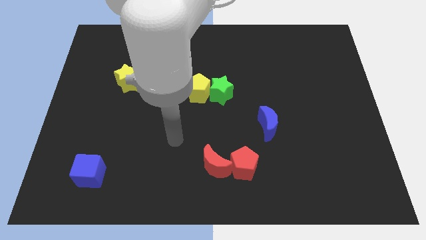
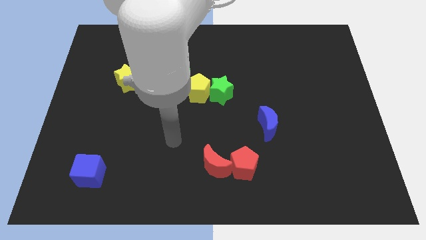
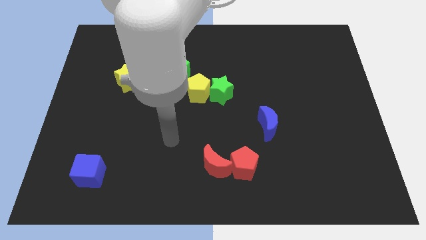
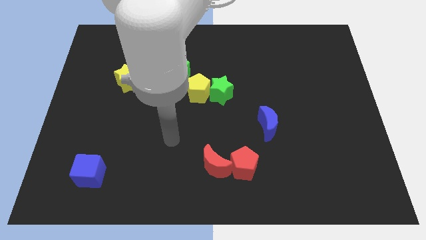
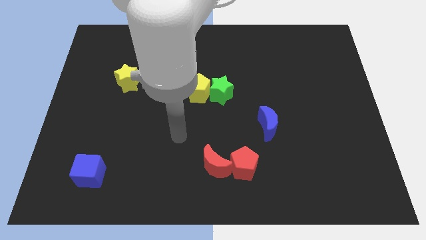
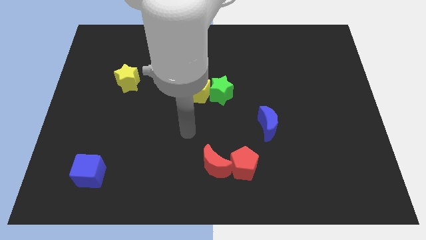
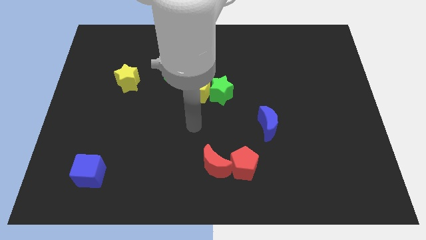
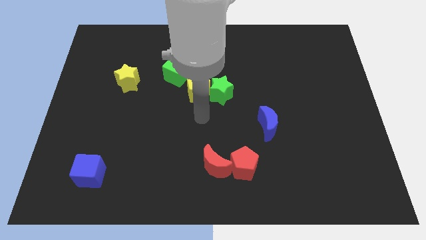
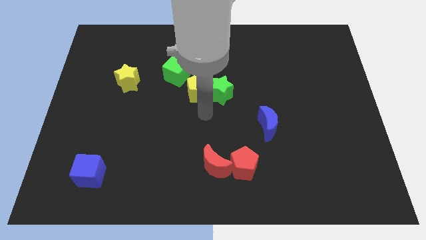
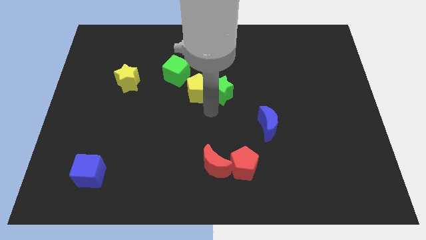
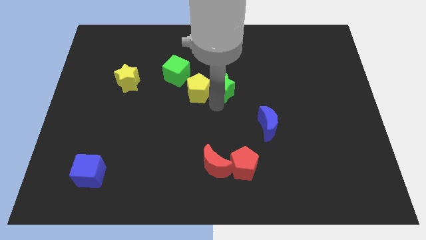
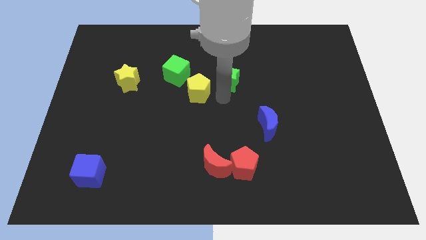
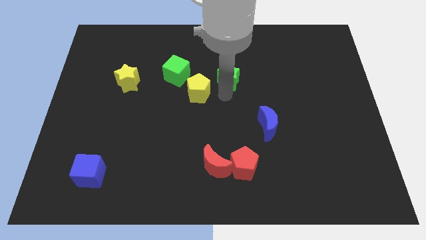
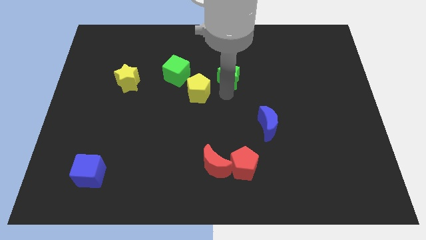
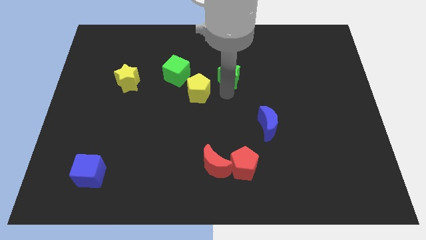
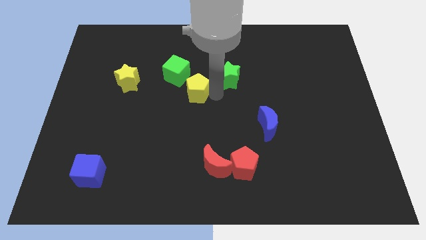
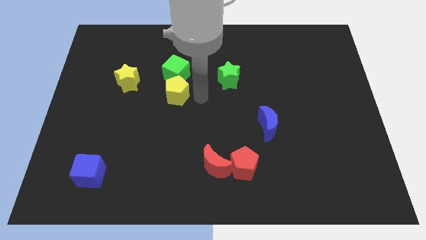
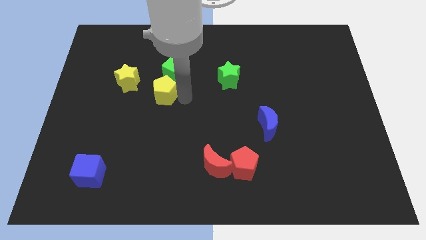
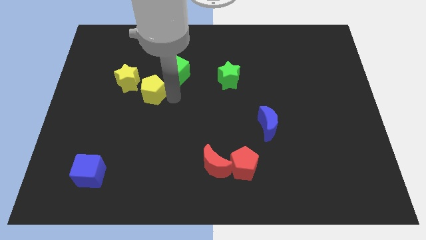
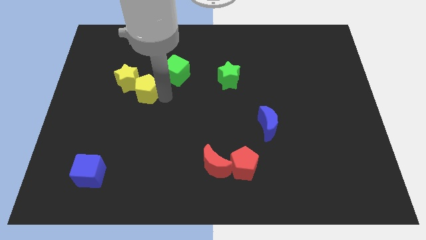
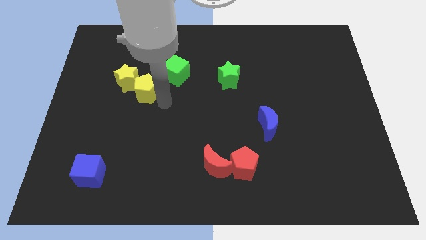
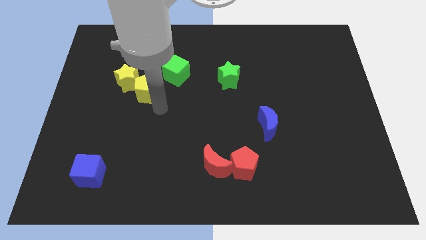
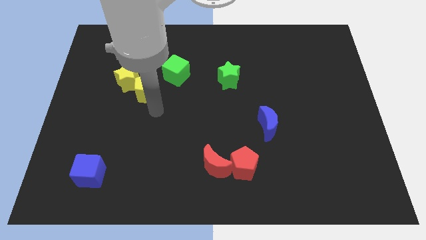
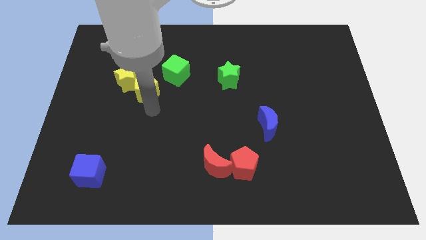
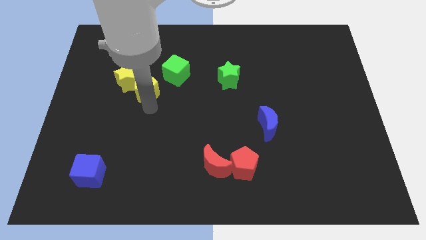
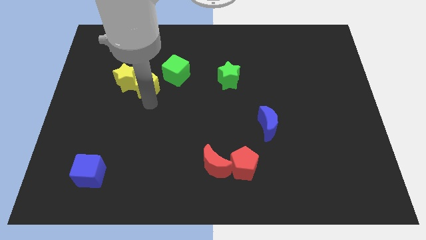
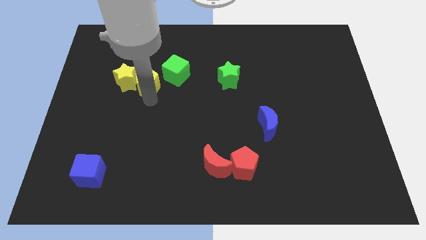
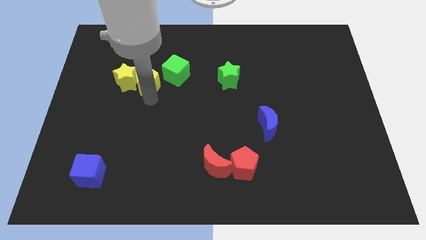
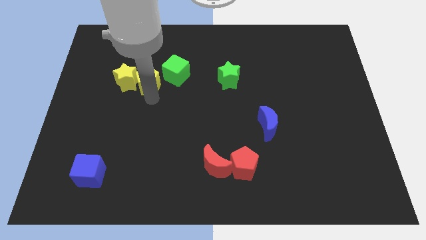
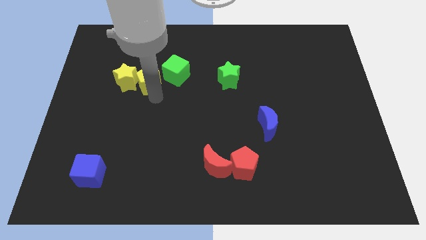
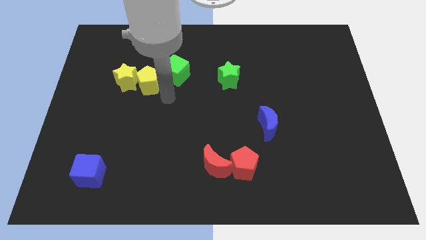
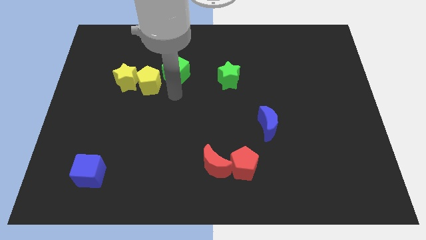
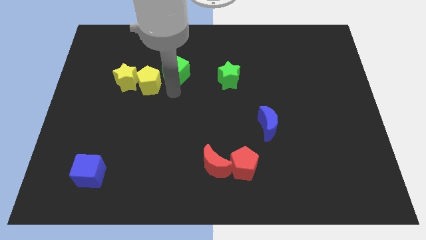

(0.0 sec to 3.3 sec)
place the yellow pentagon to the right of the yellow star

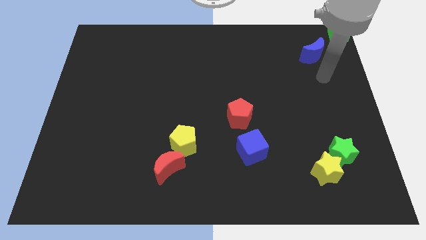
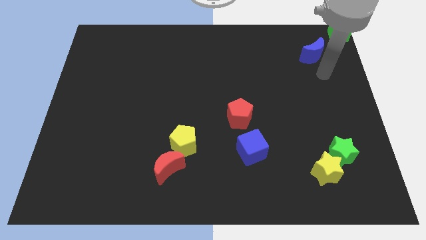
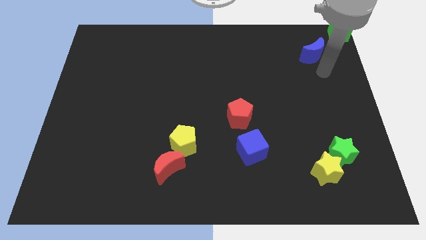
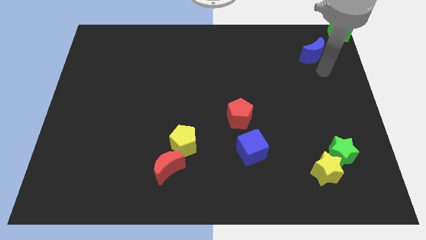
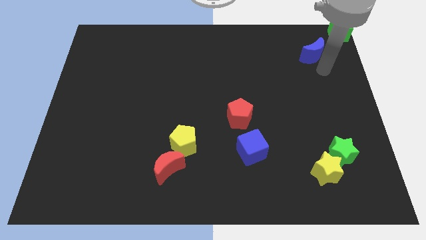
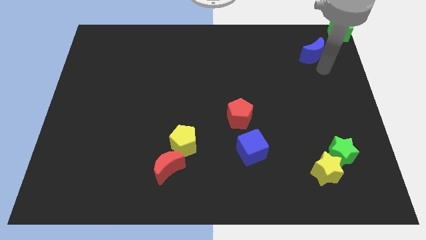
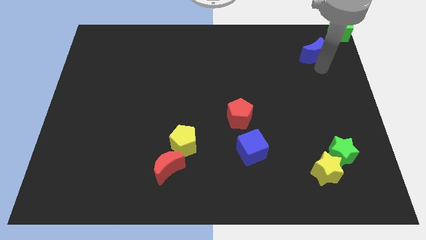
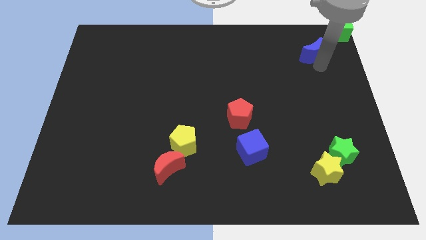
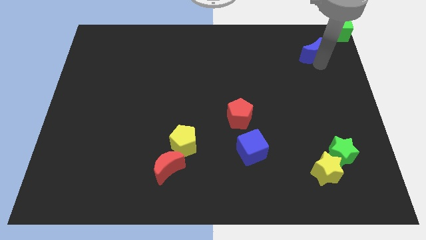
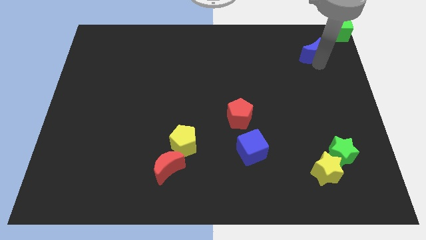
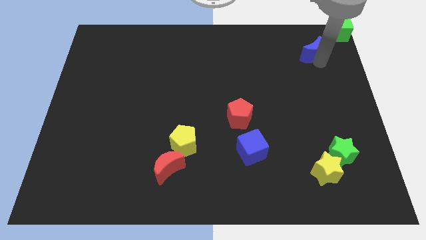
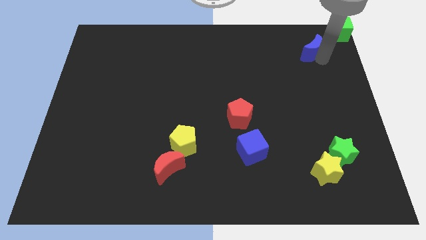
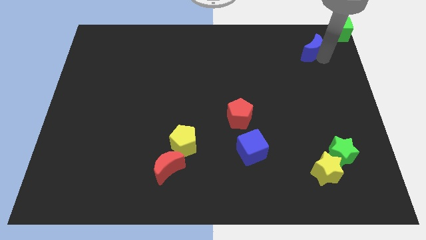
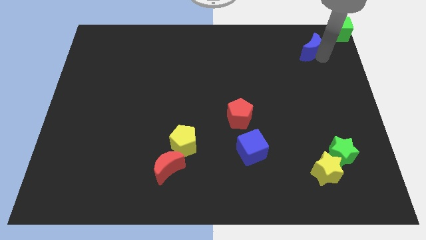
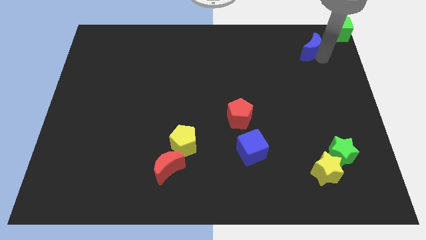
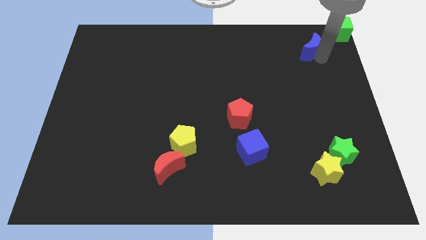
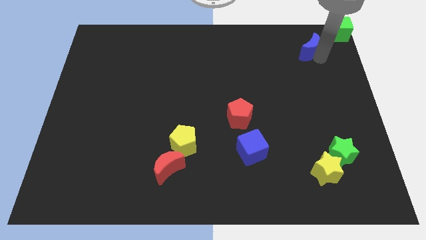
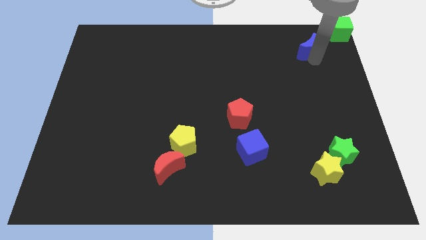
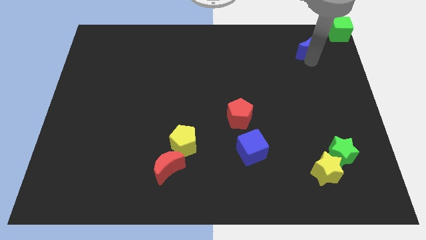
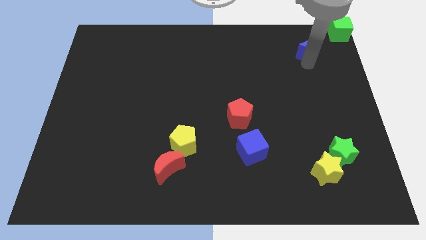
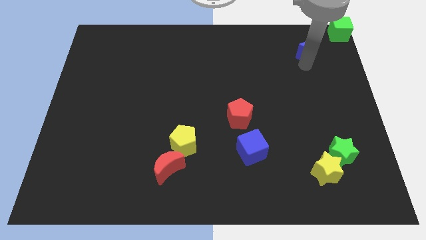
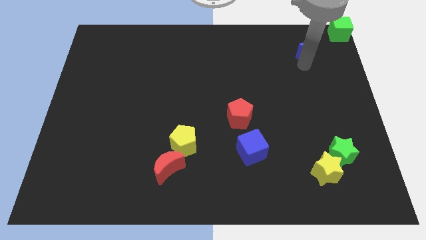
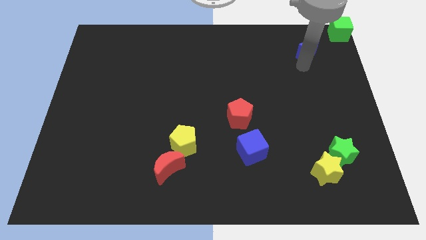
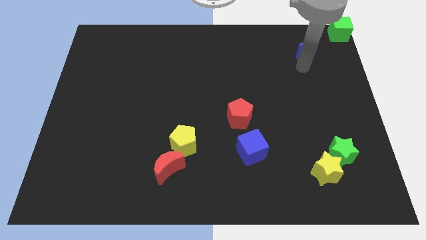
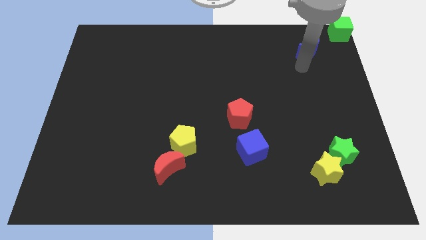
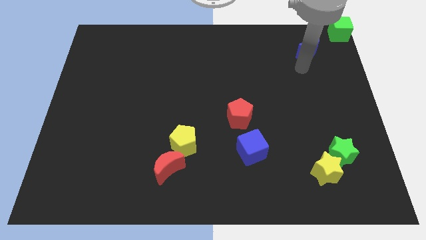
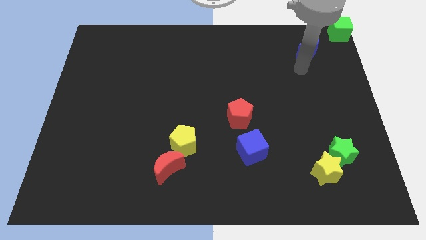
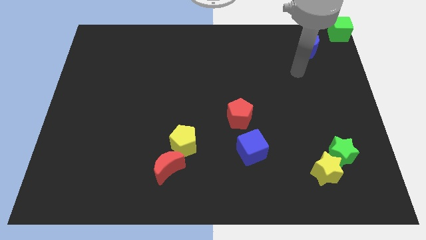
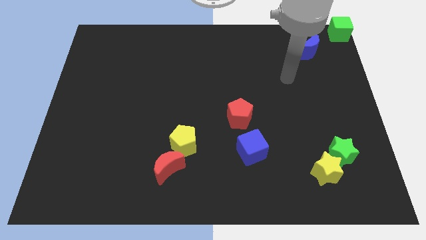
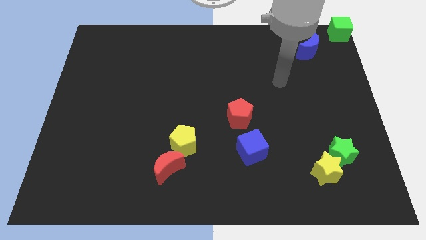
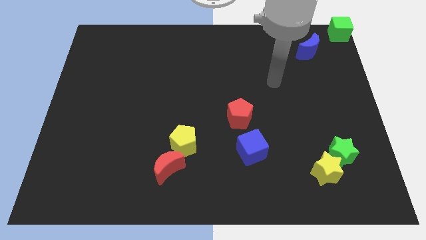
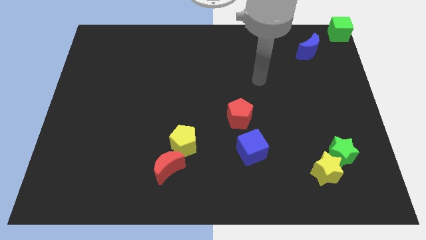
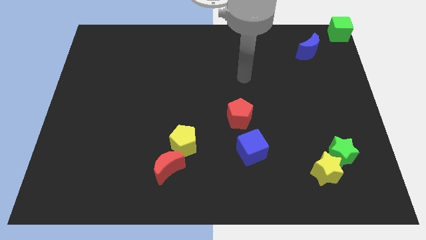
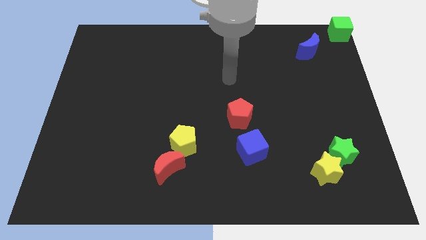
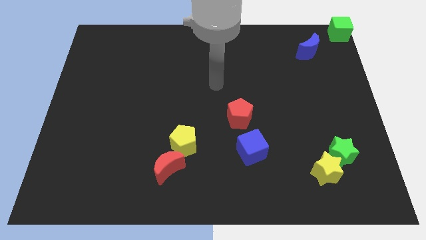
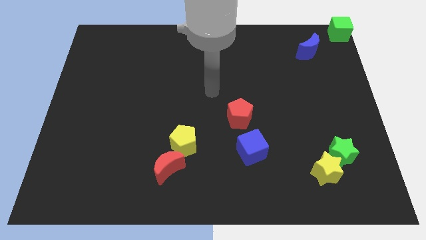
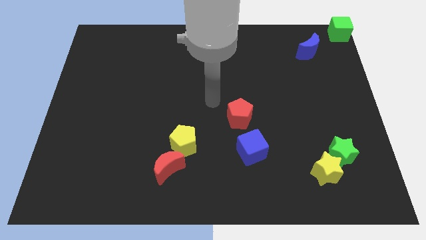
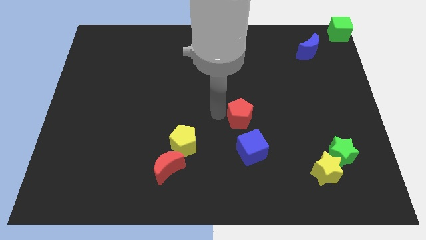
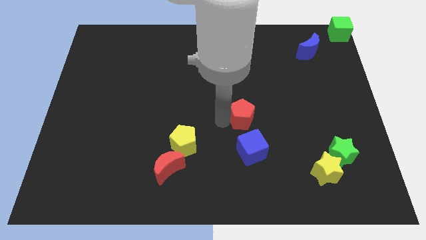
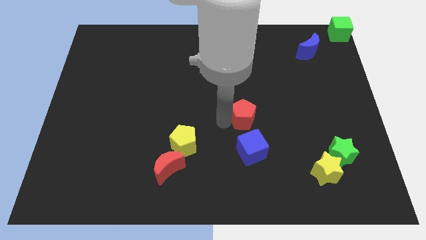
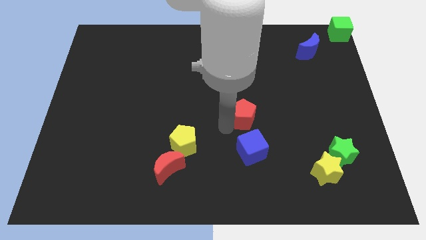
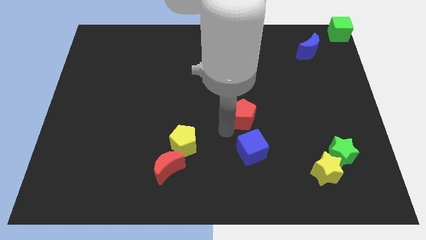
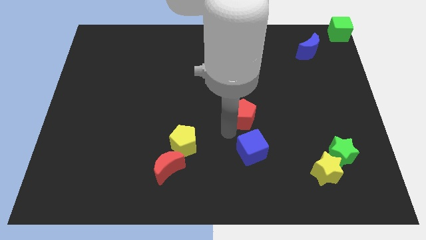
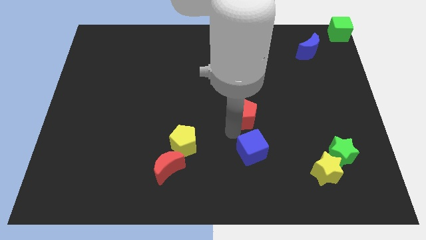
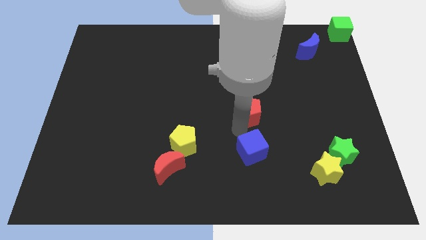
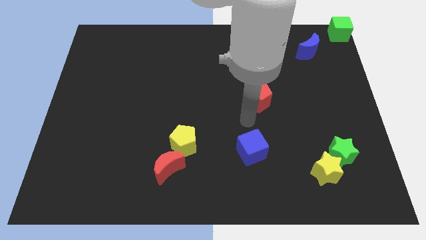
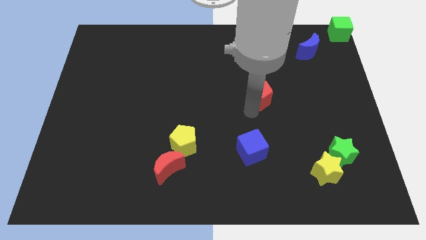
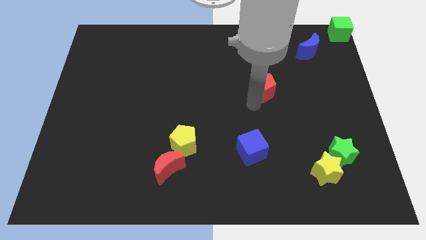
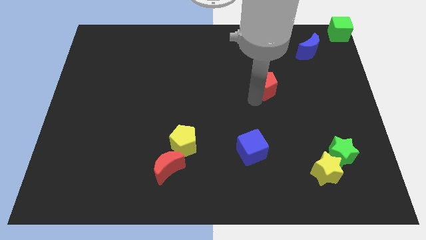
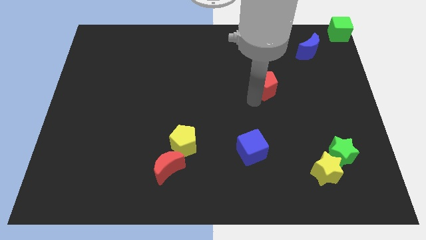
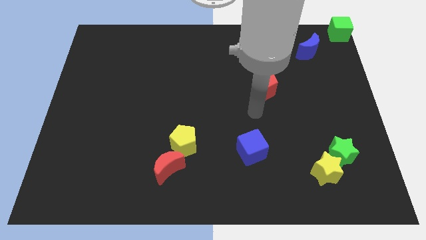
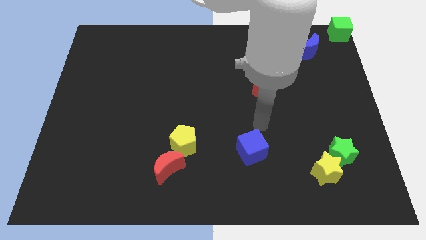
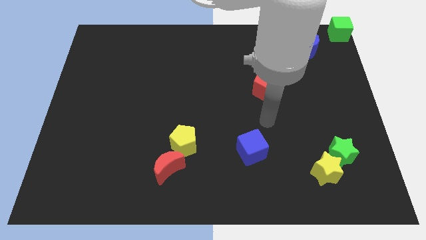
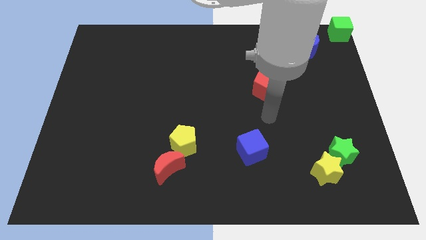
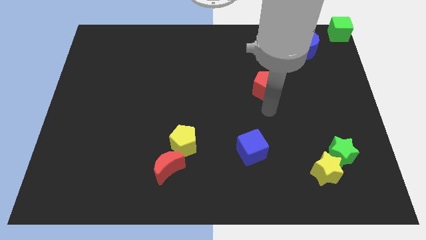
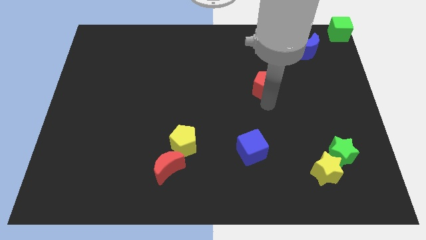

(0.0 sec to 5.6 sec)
move the red pentagon diagonal to the blue moon
